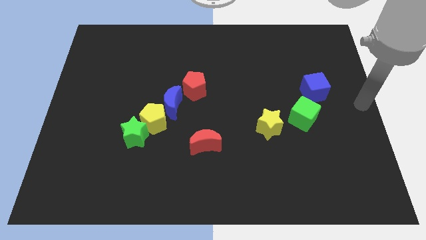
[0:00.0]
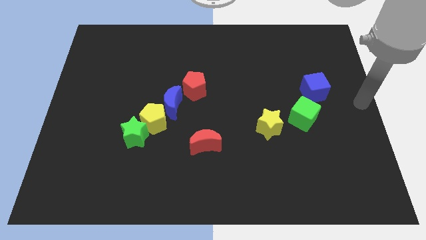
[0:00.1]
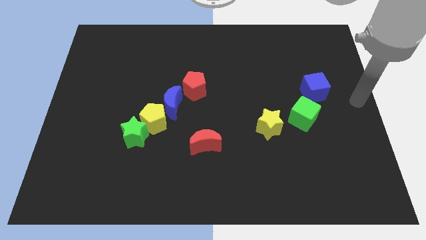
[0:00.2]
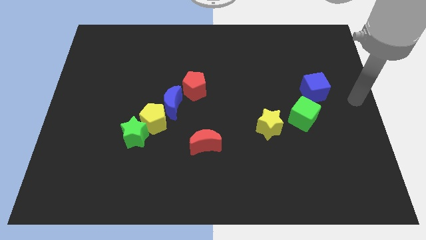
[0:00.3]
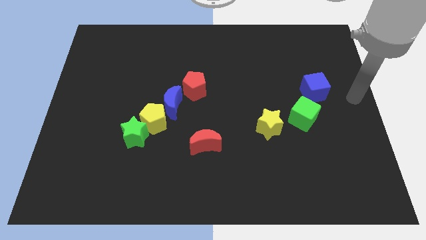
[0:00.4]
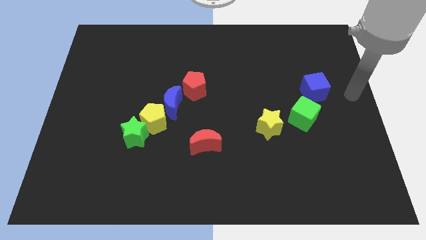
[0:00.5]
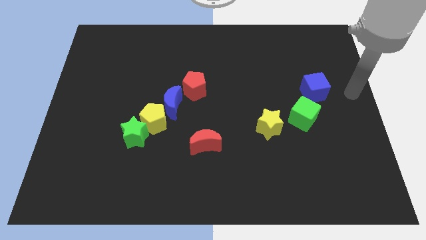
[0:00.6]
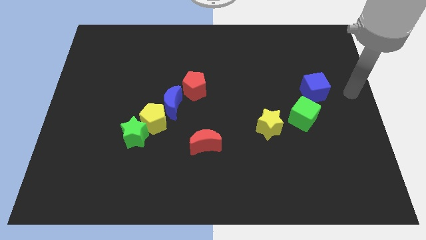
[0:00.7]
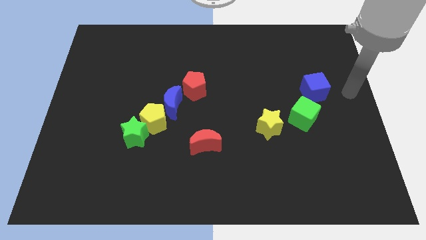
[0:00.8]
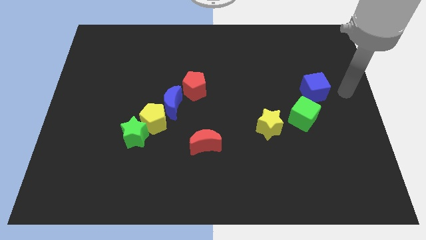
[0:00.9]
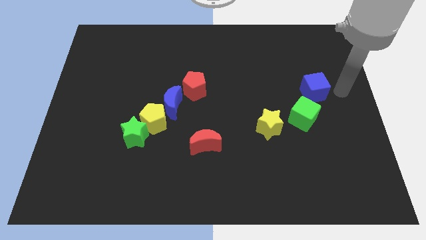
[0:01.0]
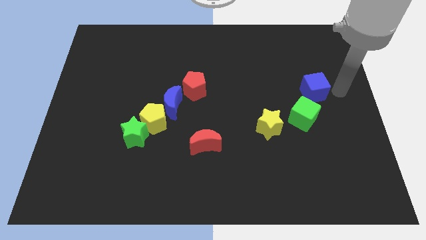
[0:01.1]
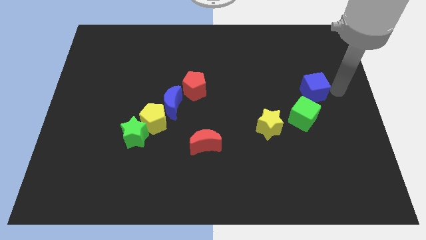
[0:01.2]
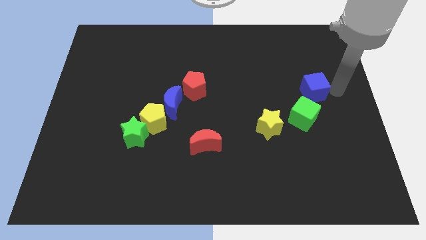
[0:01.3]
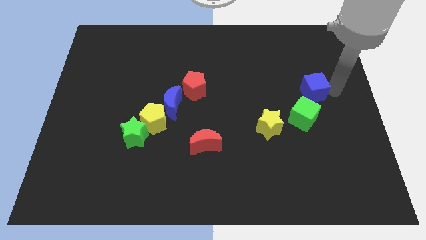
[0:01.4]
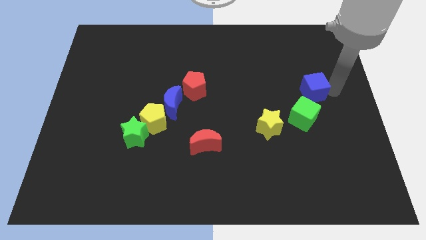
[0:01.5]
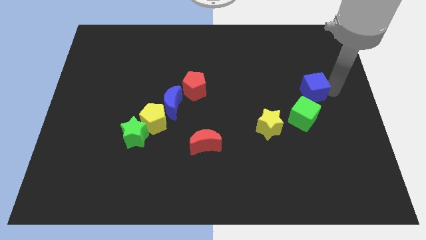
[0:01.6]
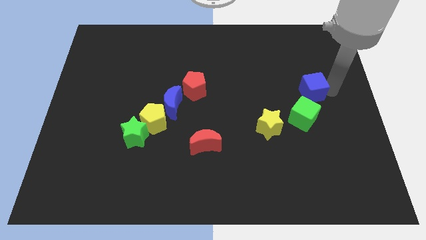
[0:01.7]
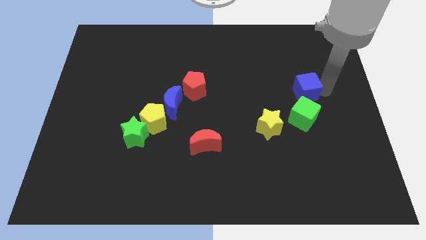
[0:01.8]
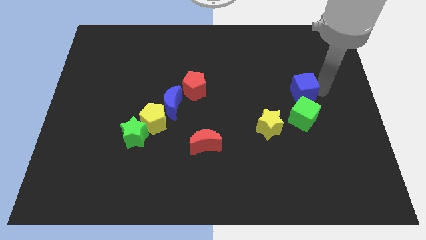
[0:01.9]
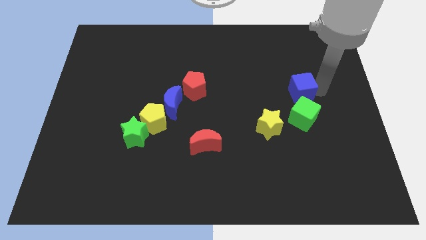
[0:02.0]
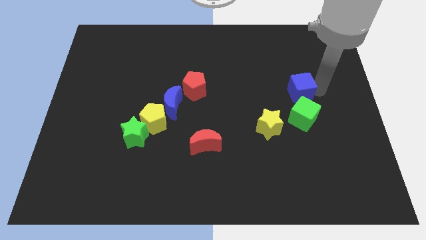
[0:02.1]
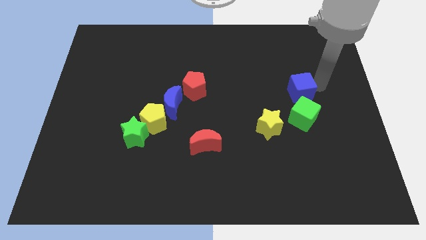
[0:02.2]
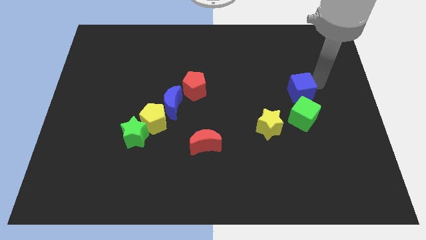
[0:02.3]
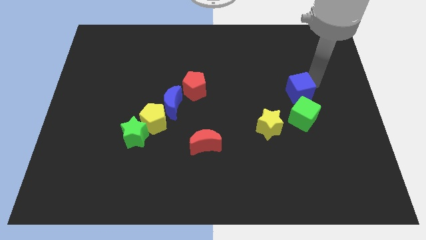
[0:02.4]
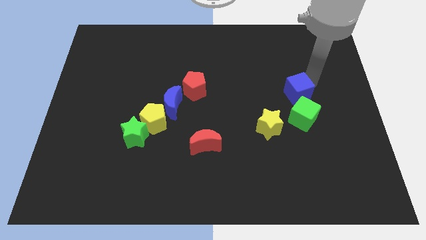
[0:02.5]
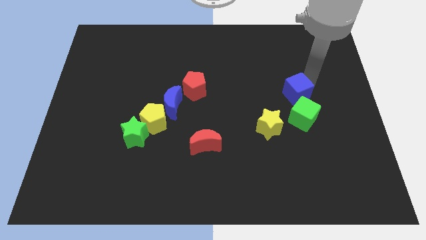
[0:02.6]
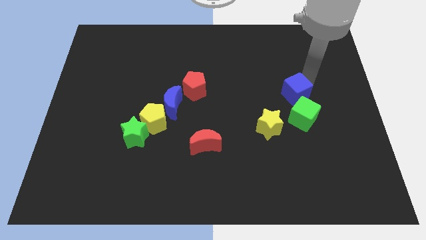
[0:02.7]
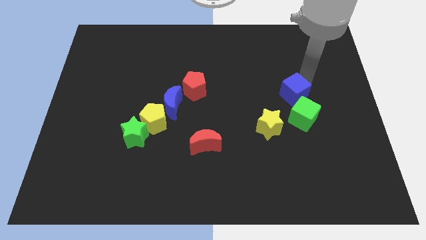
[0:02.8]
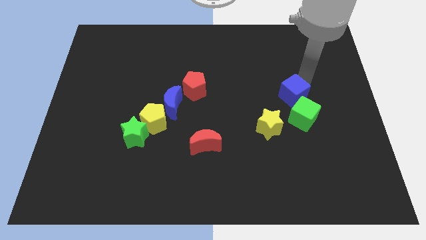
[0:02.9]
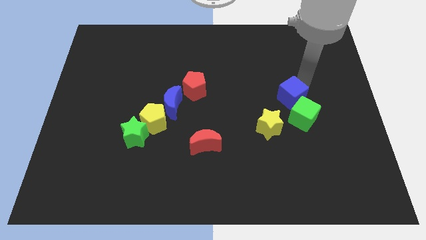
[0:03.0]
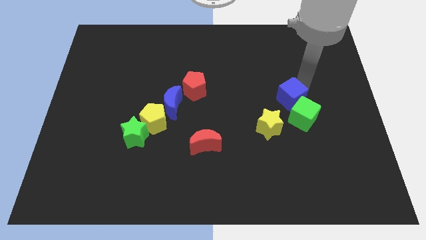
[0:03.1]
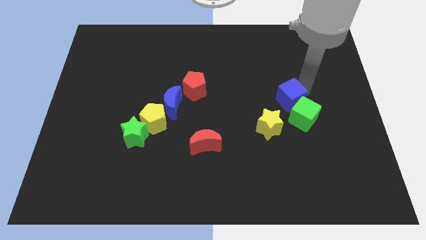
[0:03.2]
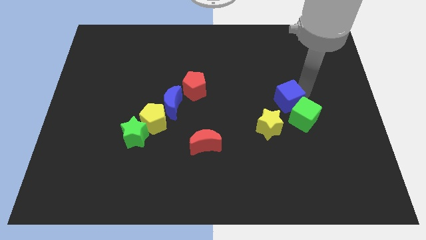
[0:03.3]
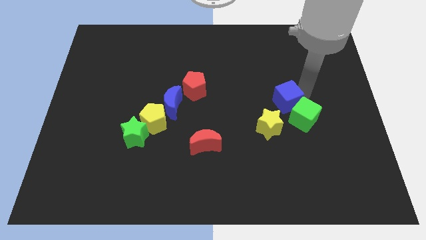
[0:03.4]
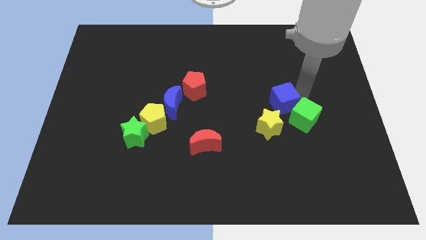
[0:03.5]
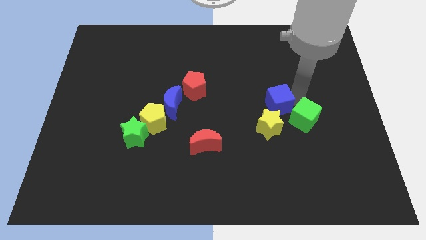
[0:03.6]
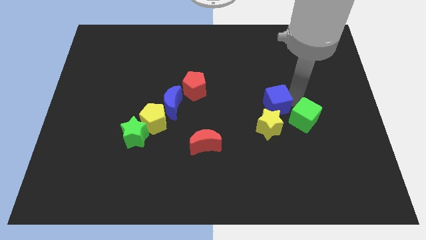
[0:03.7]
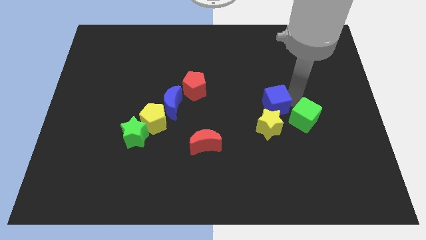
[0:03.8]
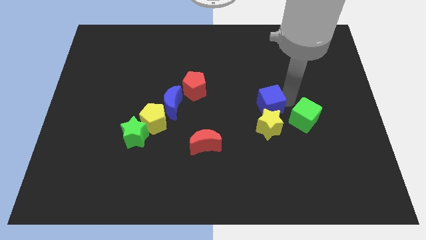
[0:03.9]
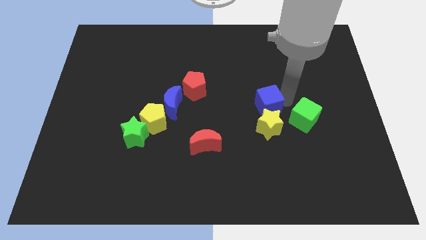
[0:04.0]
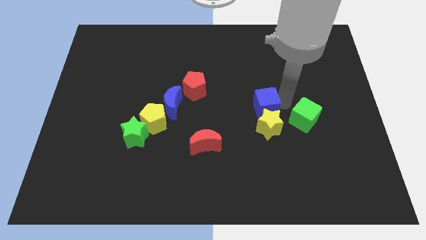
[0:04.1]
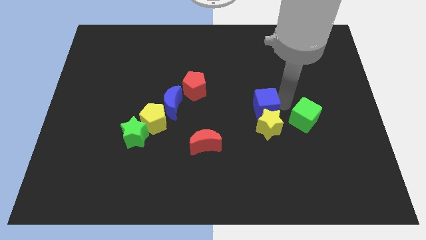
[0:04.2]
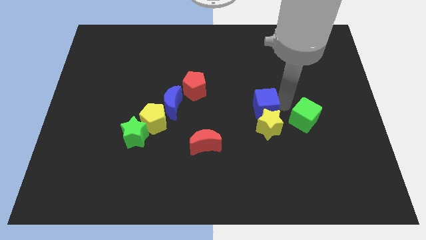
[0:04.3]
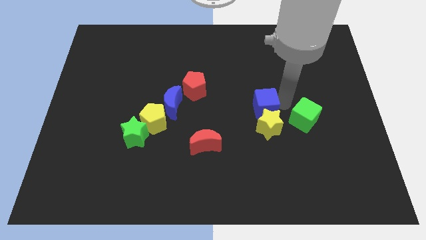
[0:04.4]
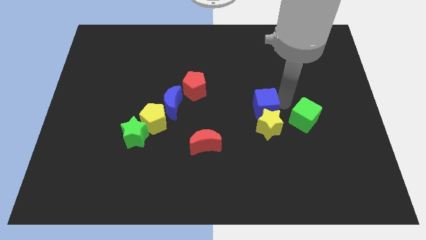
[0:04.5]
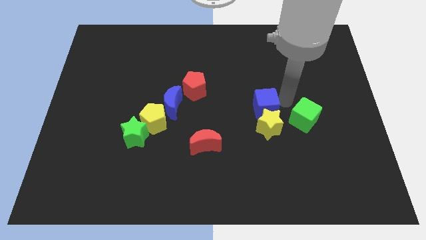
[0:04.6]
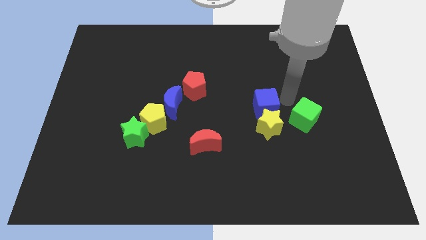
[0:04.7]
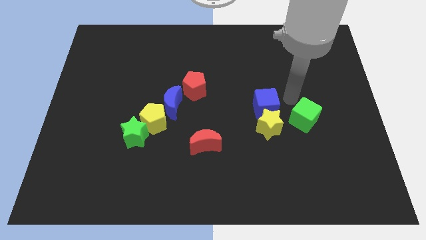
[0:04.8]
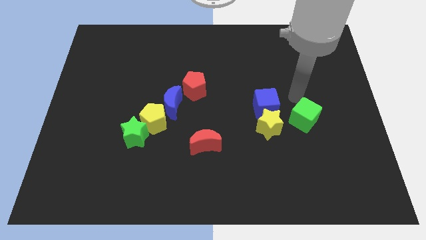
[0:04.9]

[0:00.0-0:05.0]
put the blue cube above the yellow star

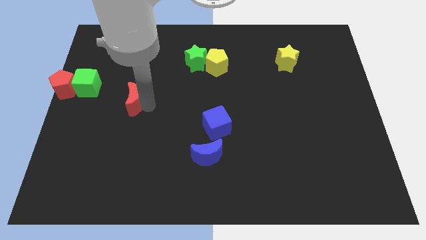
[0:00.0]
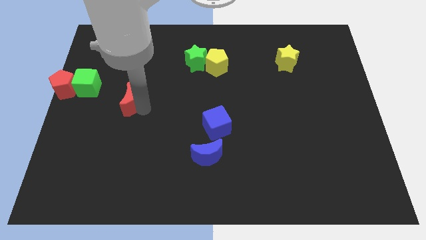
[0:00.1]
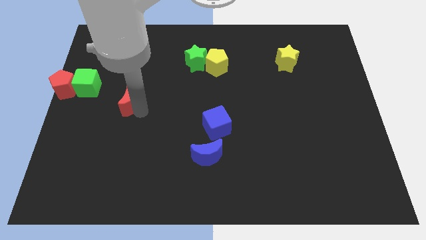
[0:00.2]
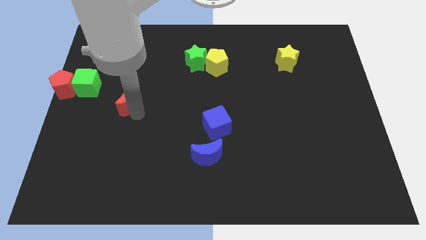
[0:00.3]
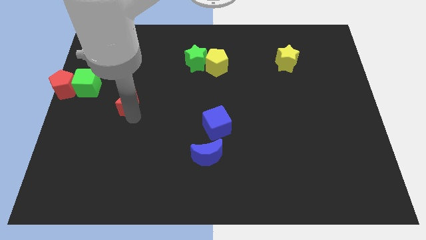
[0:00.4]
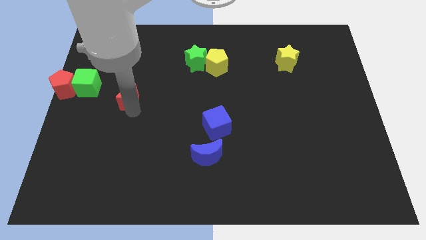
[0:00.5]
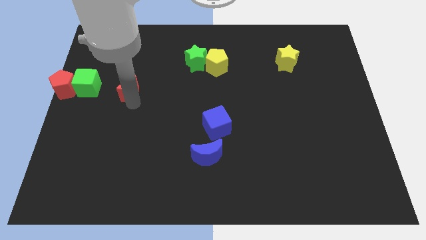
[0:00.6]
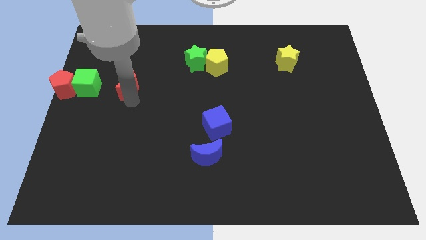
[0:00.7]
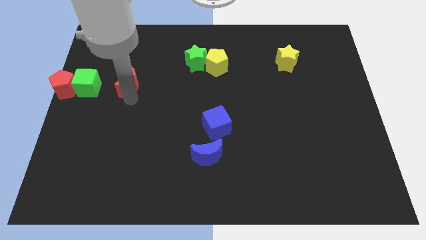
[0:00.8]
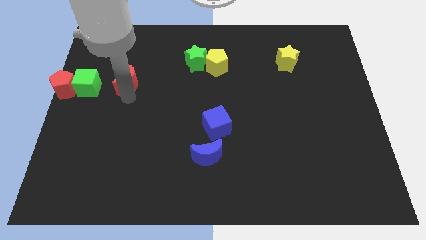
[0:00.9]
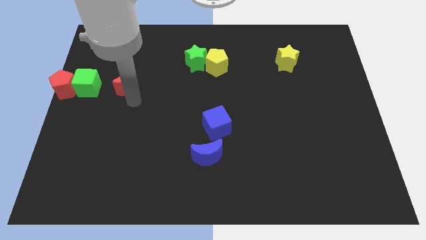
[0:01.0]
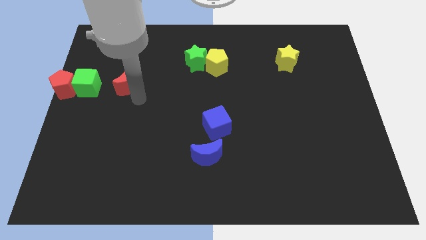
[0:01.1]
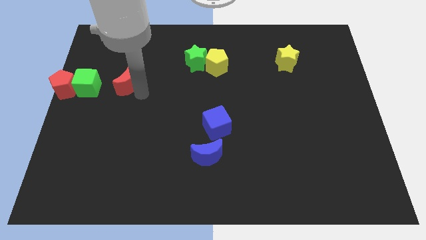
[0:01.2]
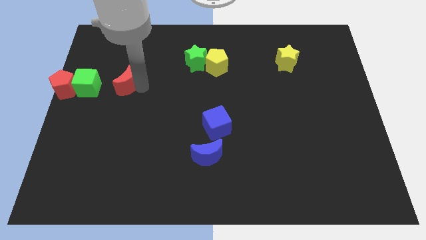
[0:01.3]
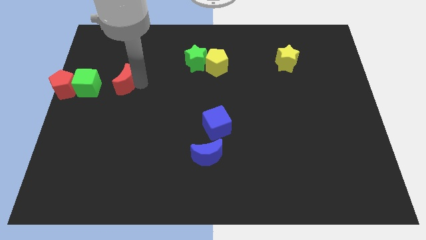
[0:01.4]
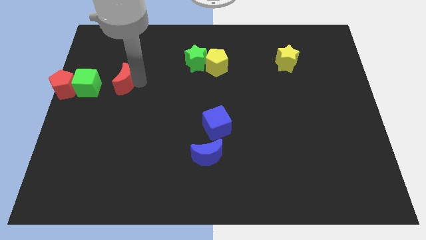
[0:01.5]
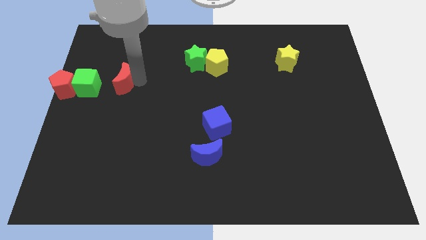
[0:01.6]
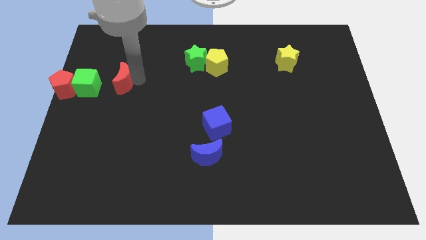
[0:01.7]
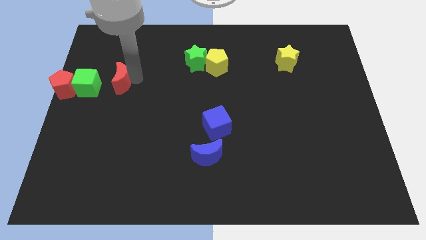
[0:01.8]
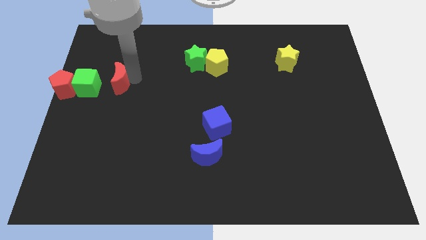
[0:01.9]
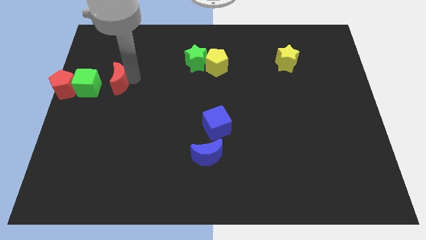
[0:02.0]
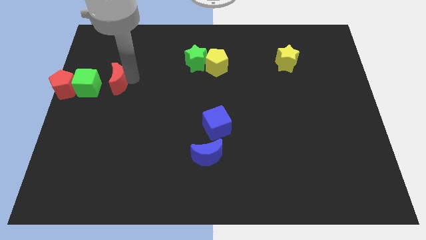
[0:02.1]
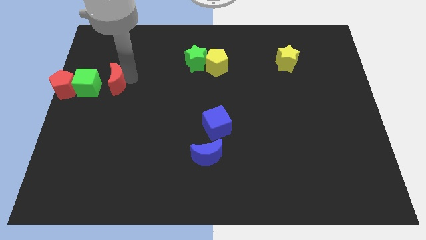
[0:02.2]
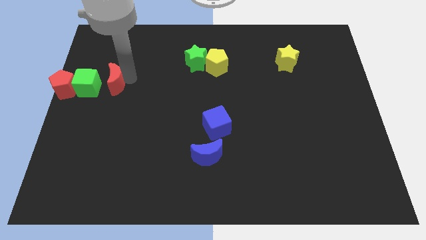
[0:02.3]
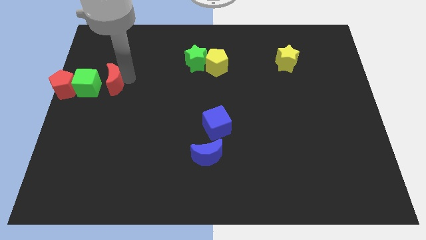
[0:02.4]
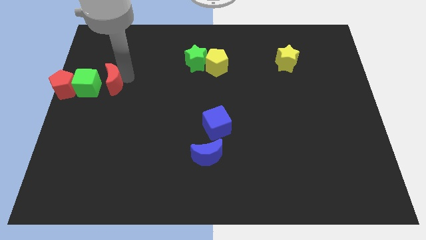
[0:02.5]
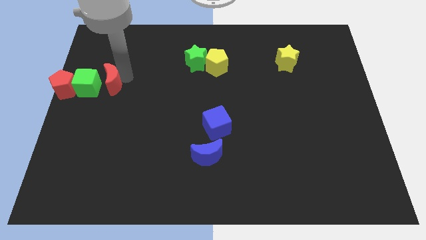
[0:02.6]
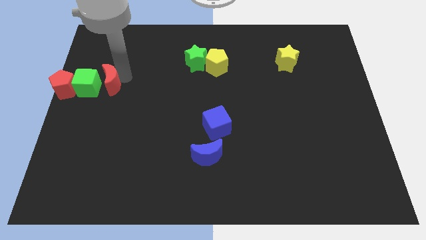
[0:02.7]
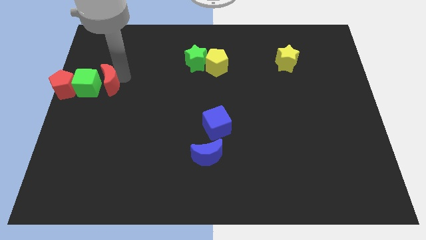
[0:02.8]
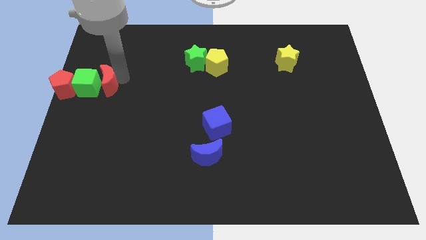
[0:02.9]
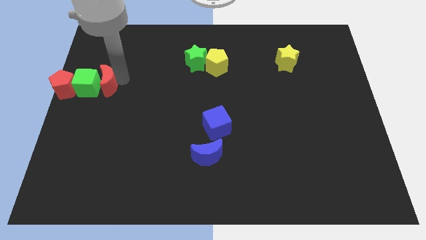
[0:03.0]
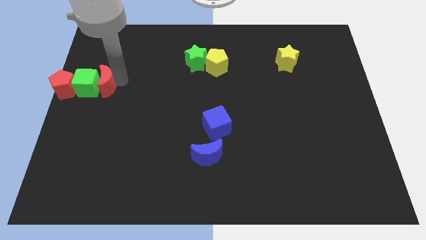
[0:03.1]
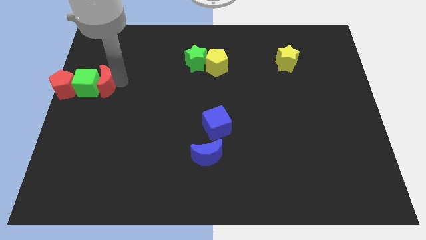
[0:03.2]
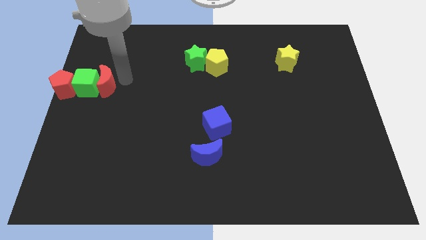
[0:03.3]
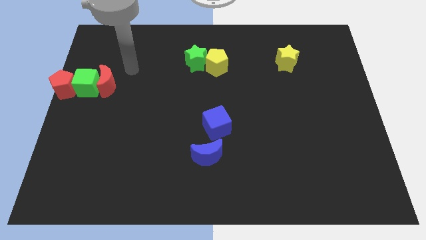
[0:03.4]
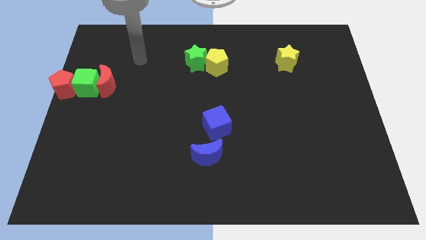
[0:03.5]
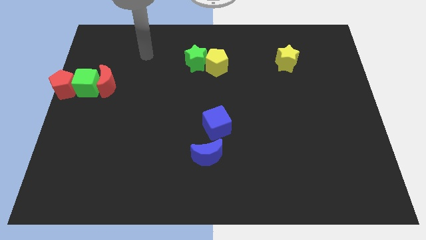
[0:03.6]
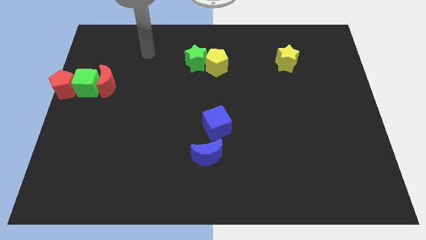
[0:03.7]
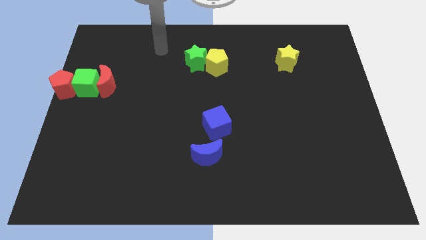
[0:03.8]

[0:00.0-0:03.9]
slide the red crescent to the right side of the green cube

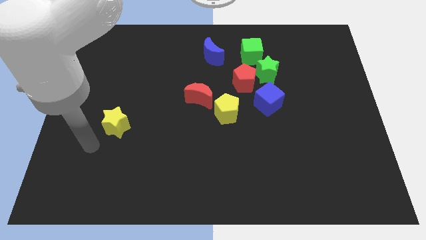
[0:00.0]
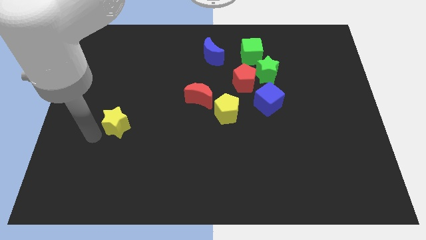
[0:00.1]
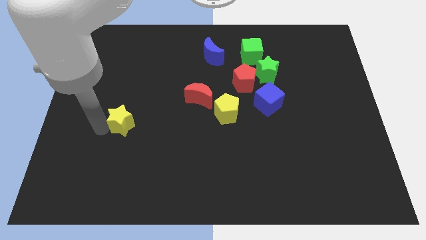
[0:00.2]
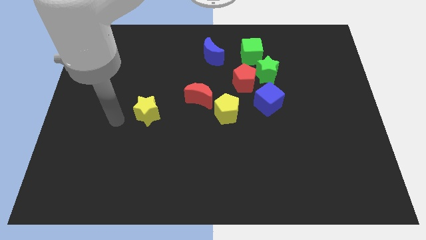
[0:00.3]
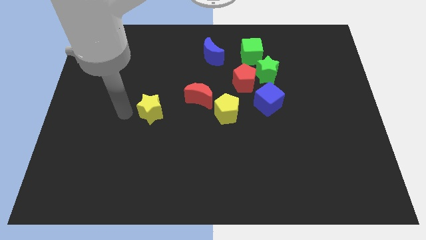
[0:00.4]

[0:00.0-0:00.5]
move the yellow star to the bottom left of the red moon
